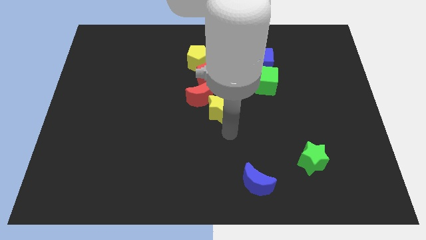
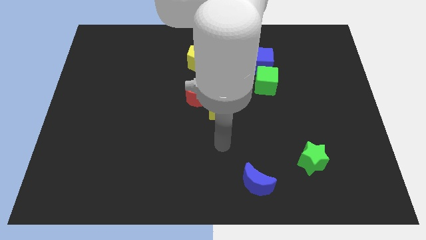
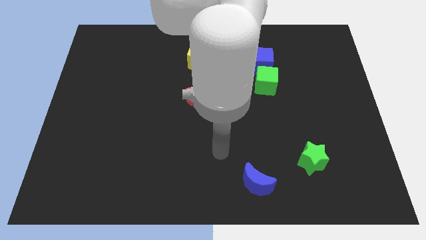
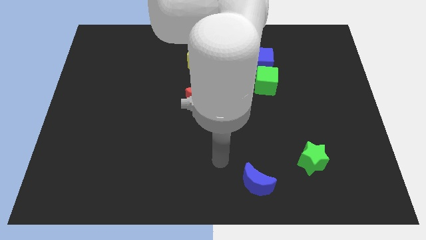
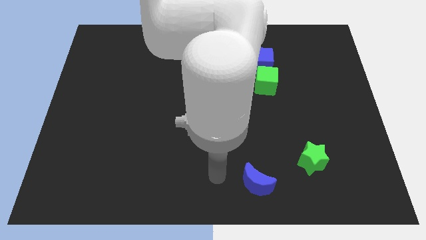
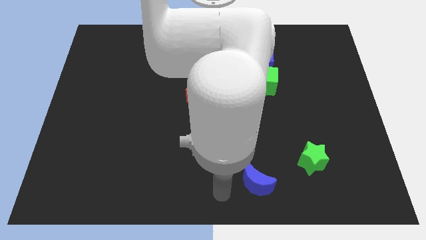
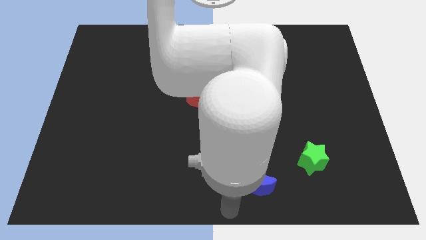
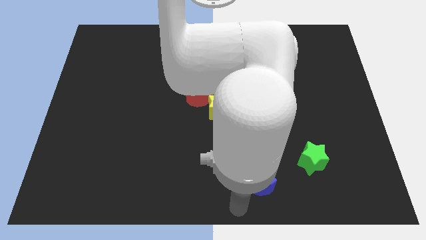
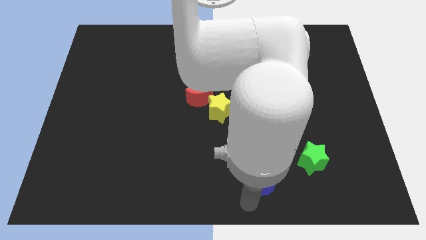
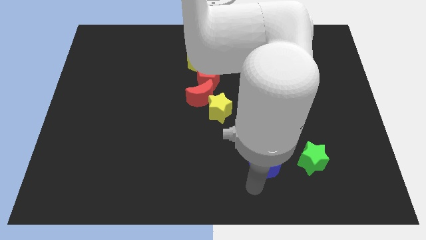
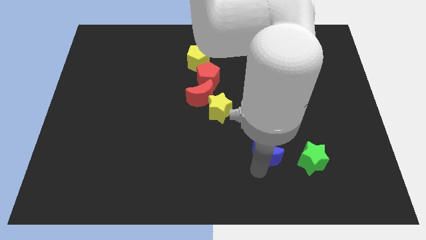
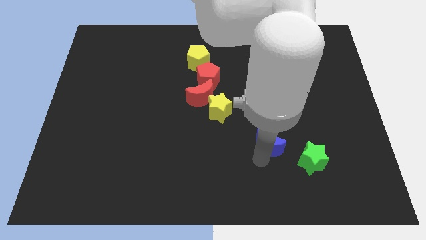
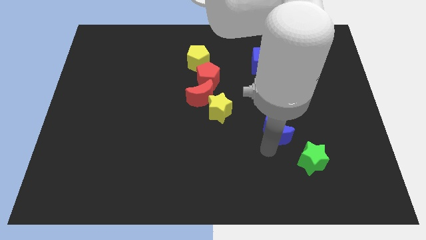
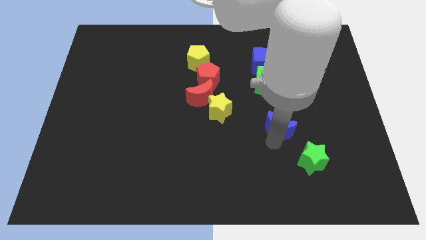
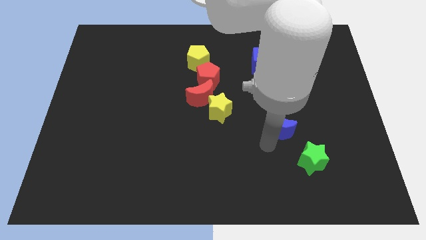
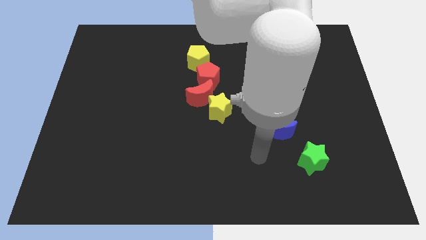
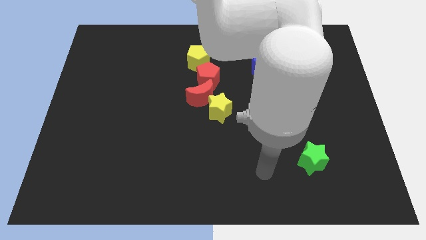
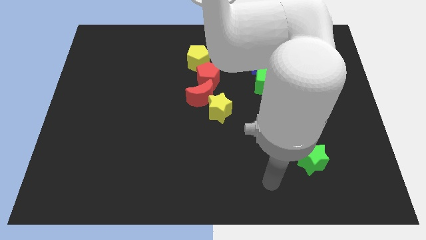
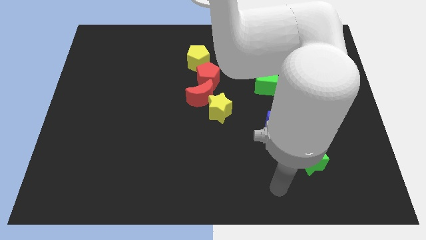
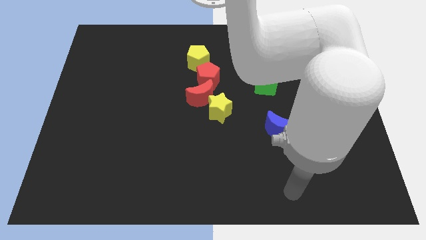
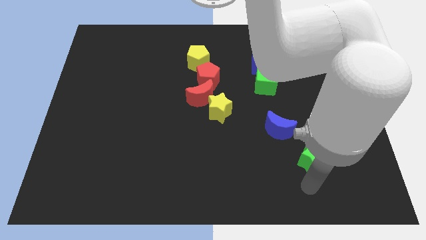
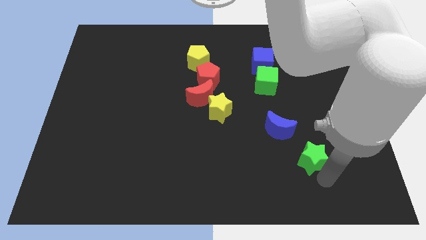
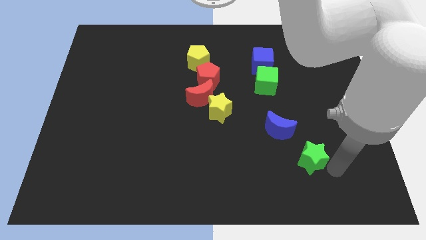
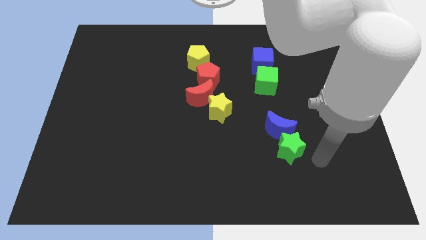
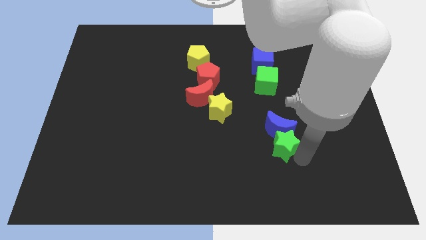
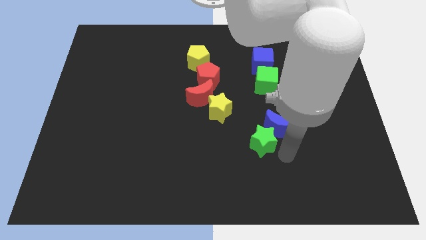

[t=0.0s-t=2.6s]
place the green star and the blue crescent in a vertical line

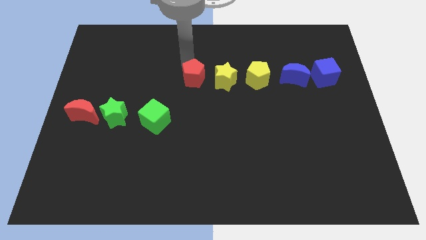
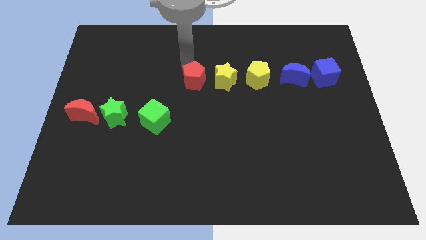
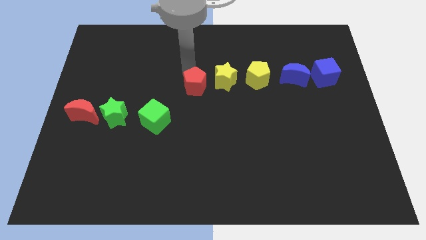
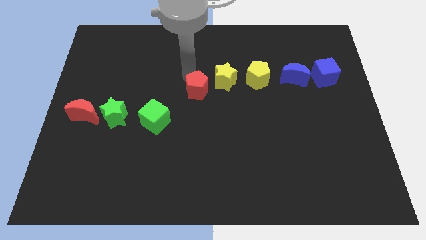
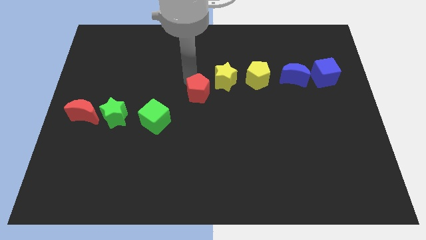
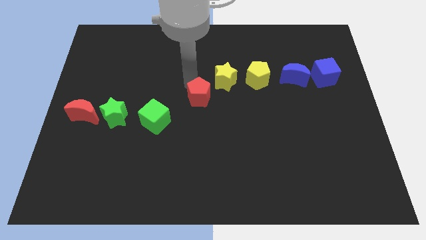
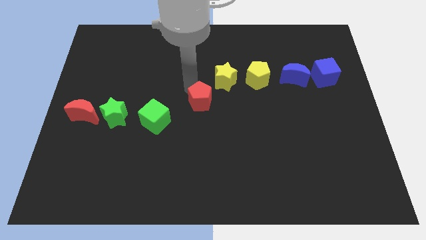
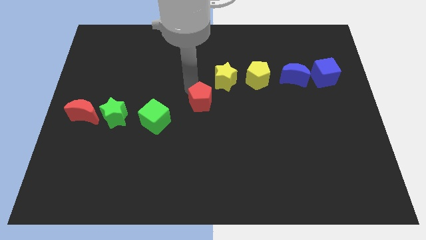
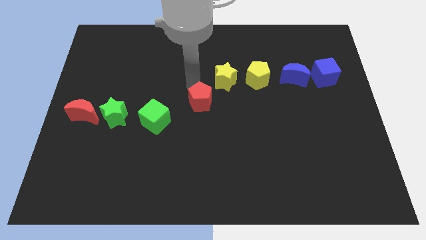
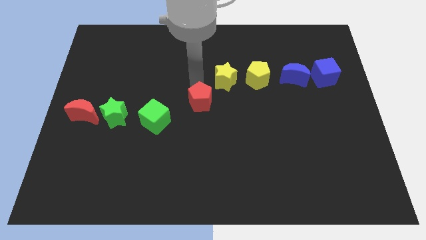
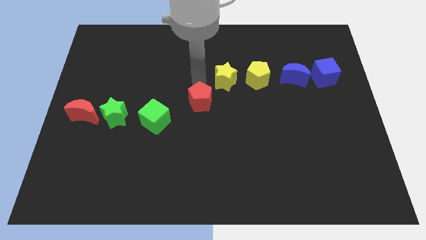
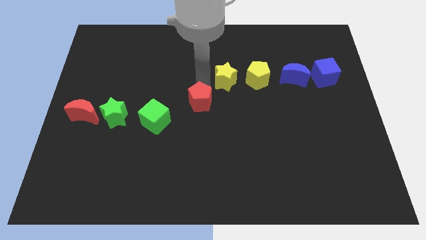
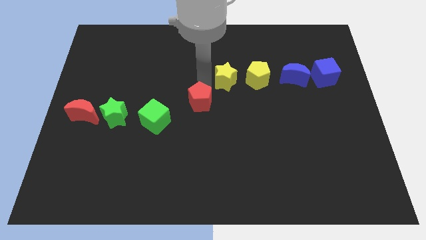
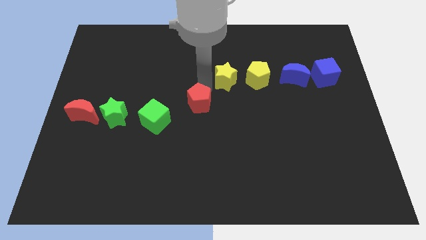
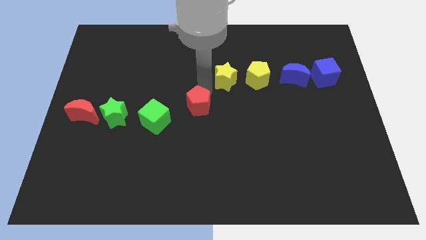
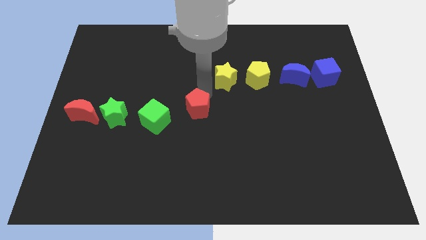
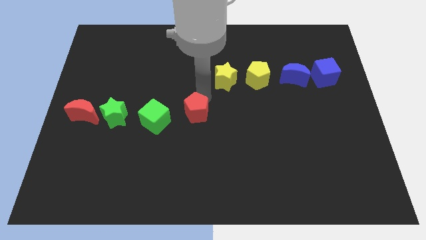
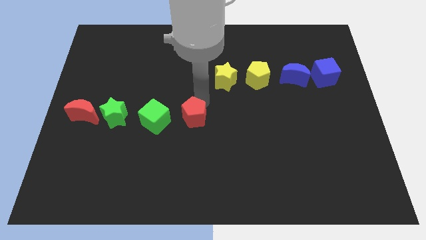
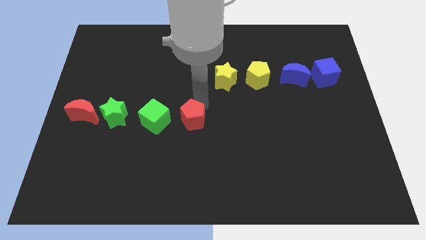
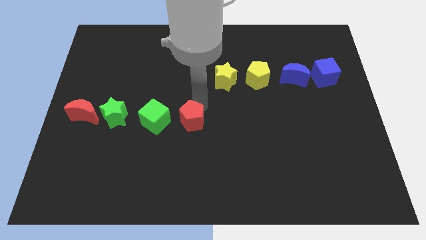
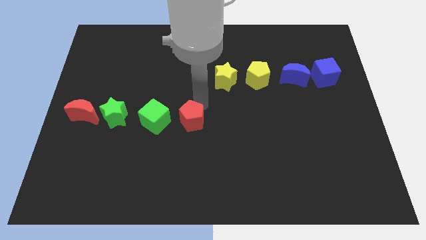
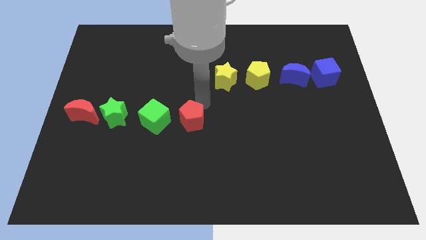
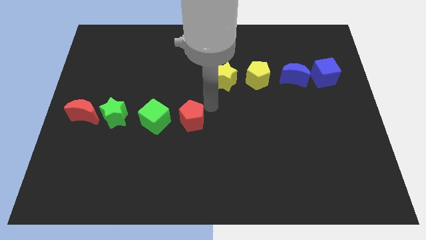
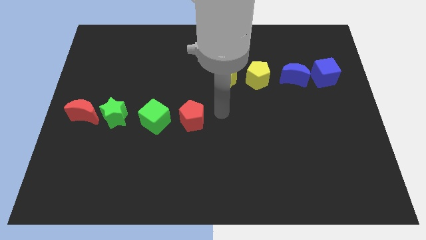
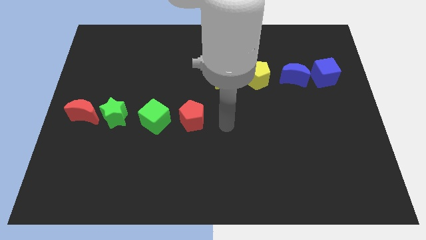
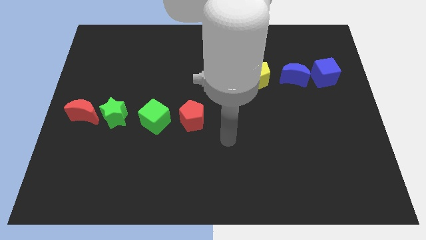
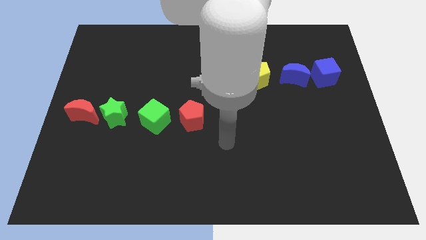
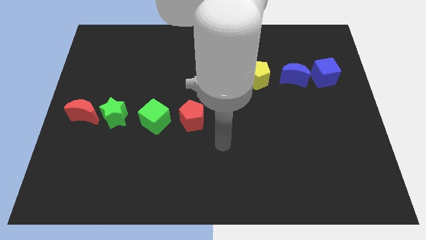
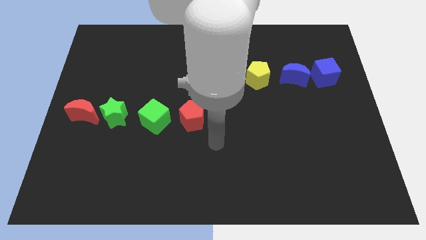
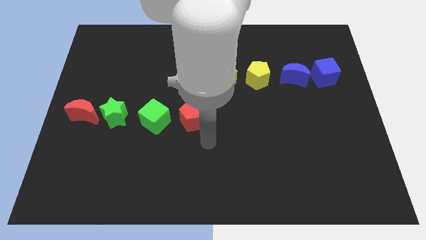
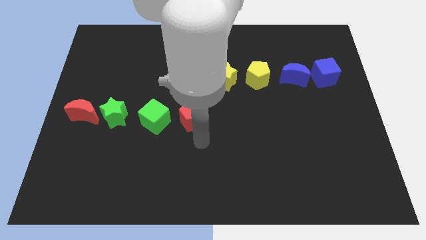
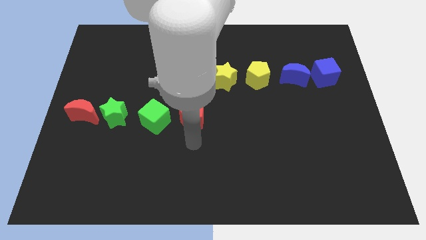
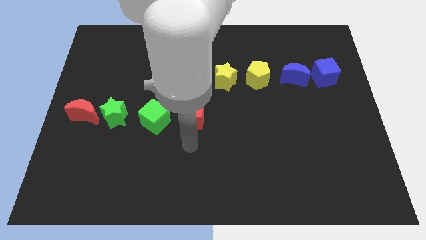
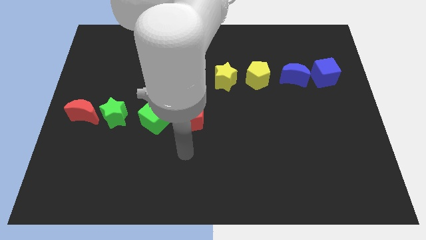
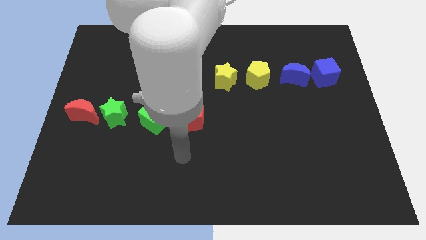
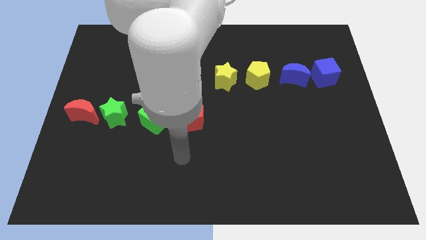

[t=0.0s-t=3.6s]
push red pentagon beside green cube

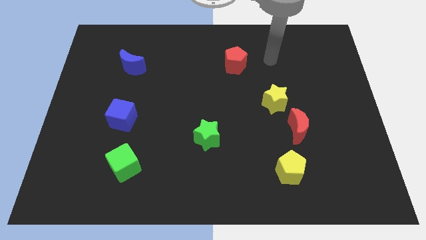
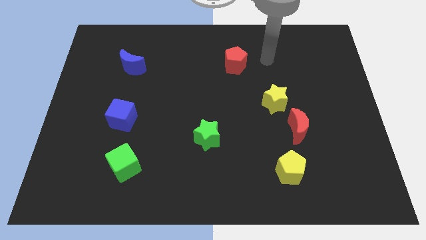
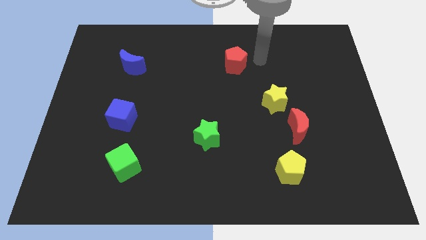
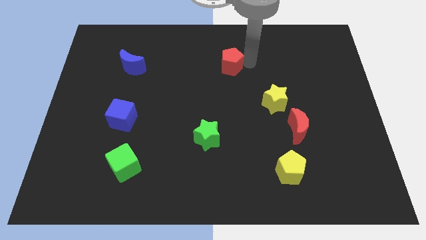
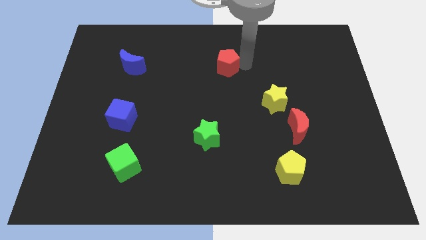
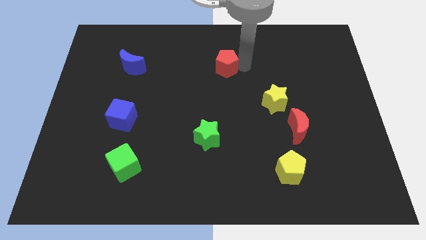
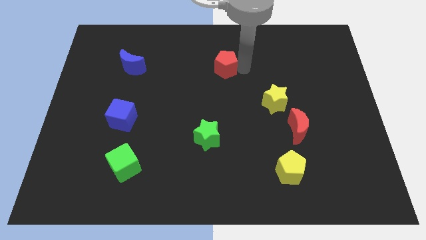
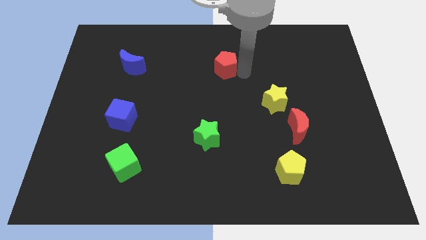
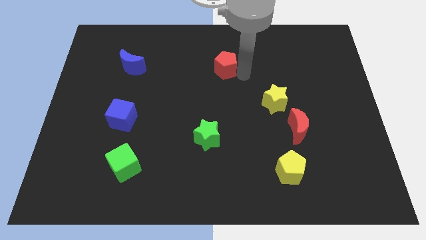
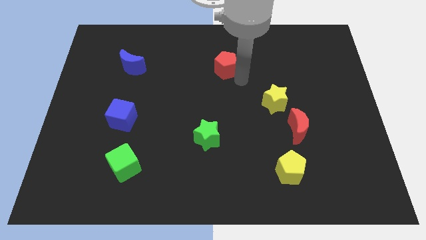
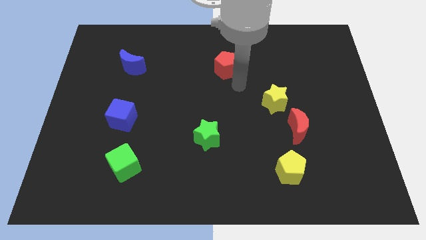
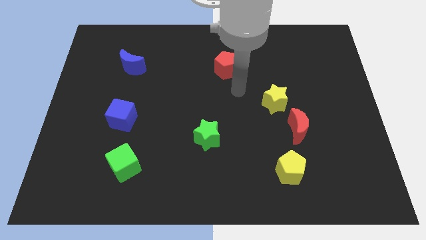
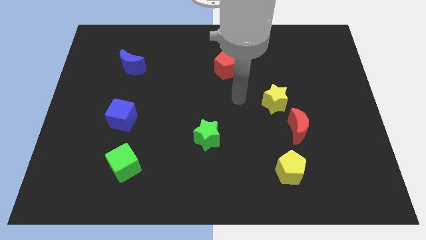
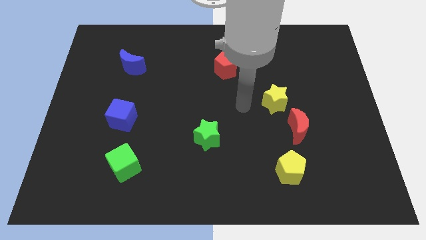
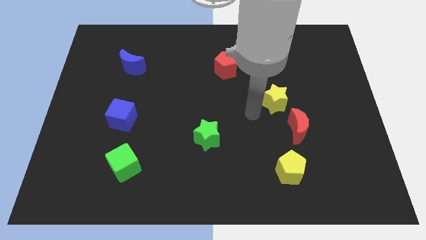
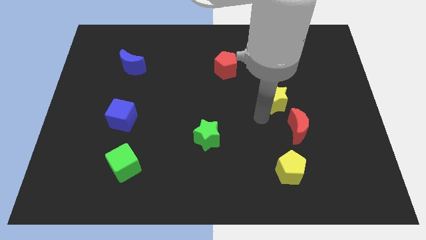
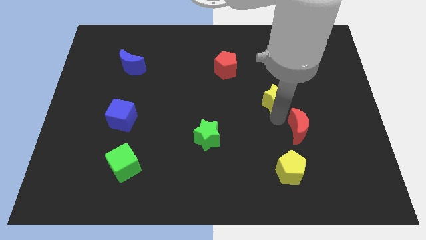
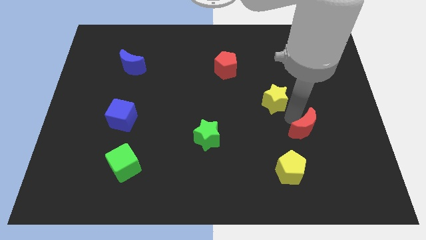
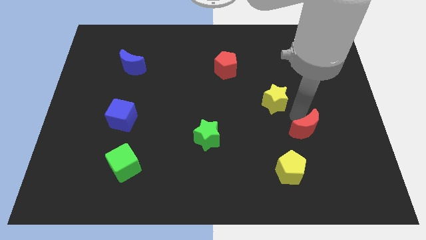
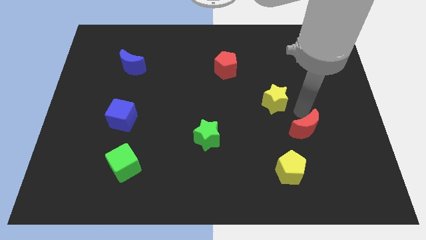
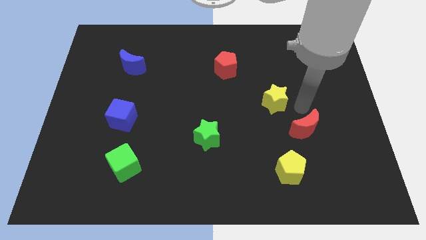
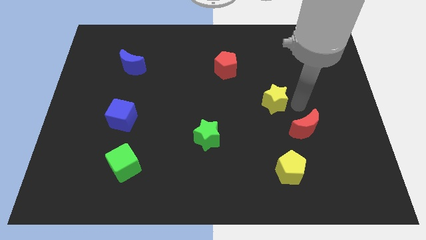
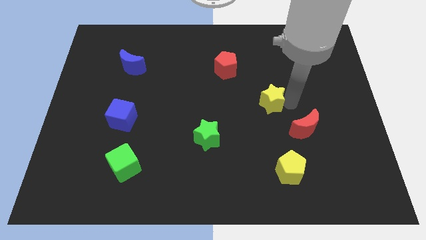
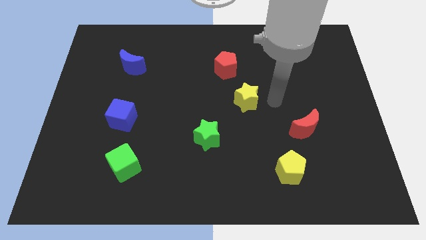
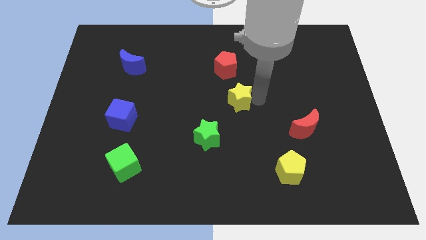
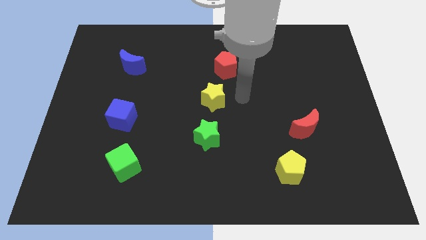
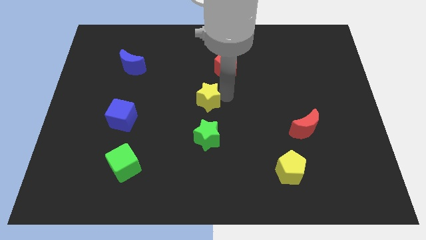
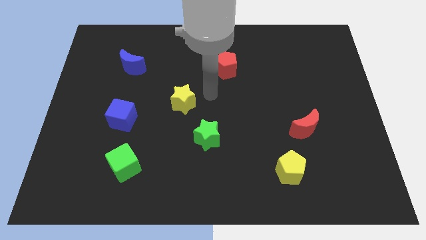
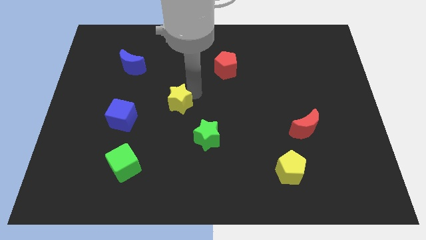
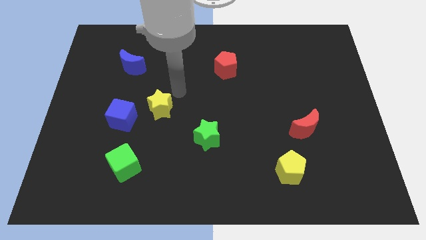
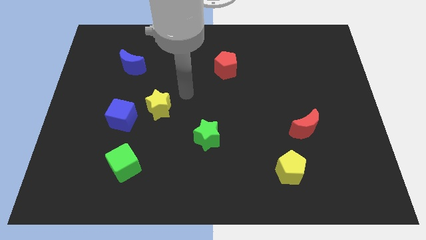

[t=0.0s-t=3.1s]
push the yellow star to the top left of the green star
